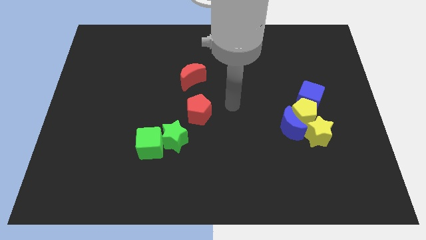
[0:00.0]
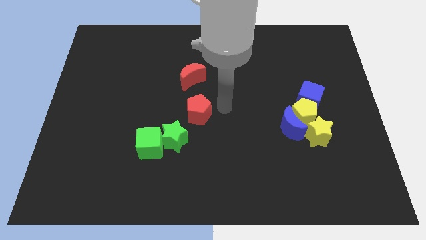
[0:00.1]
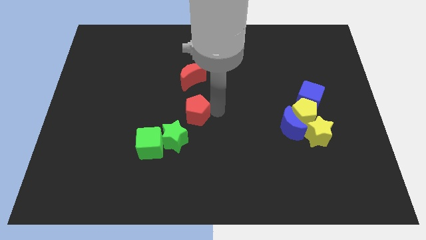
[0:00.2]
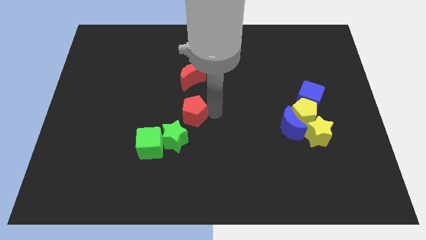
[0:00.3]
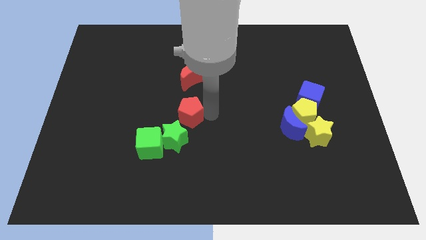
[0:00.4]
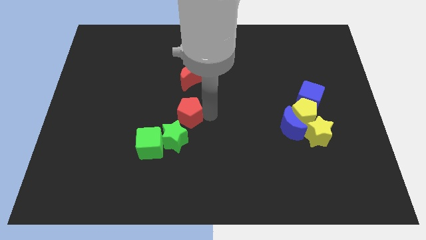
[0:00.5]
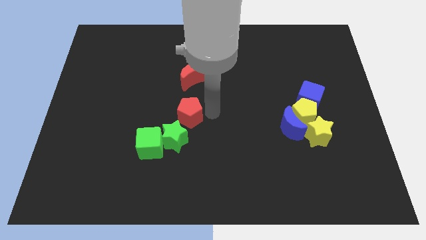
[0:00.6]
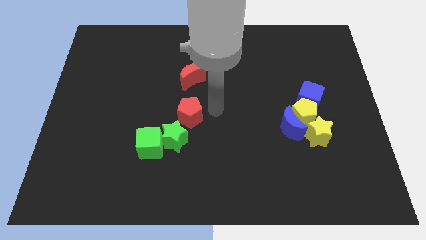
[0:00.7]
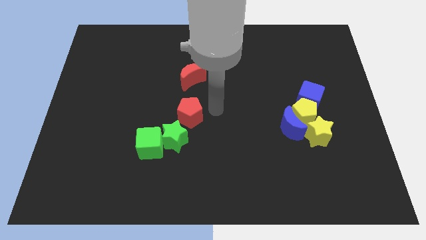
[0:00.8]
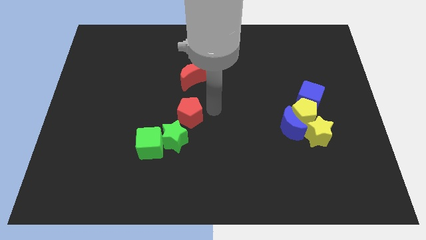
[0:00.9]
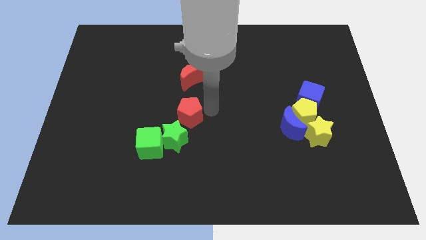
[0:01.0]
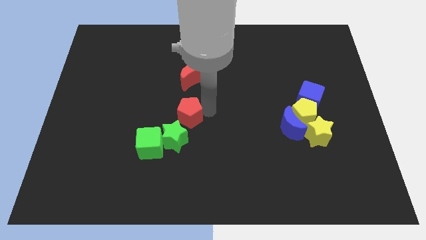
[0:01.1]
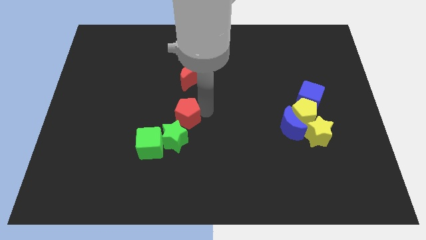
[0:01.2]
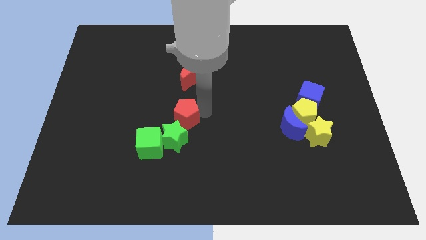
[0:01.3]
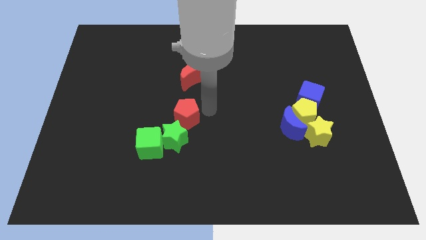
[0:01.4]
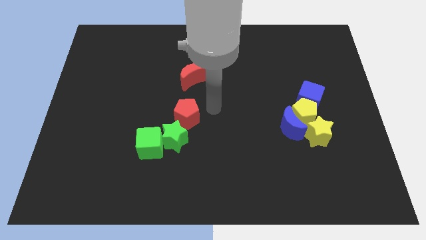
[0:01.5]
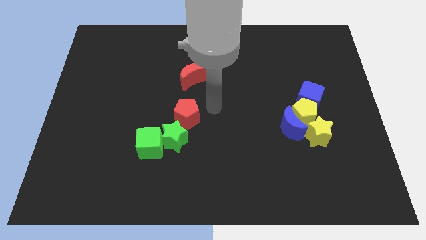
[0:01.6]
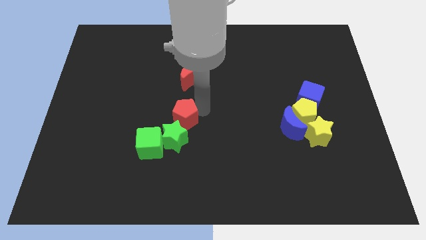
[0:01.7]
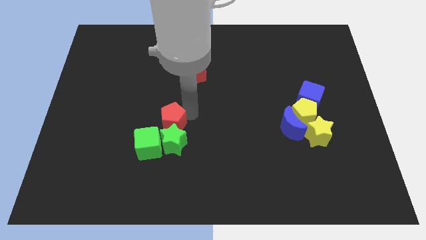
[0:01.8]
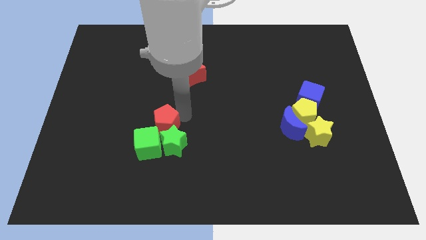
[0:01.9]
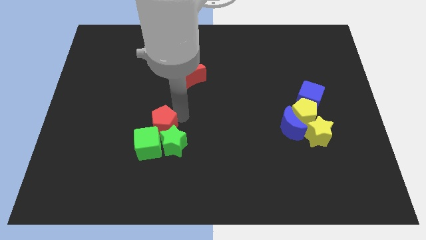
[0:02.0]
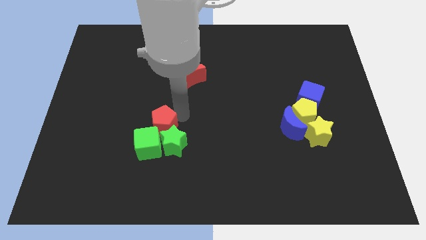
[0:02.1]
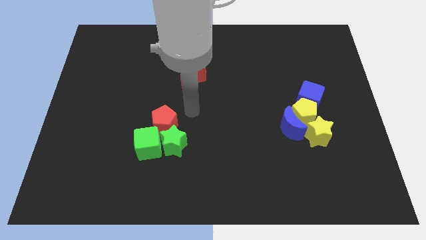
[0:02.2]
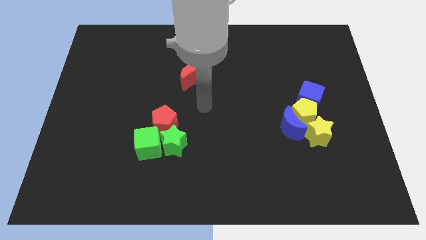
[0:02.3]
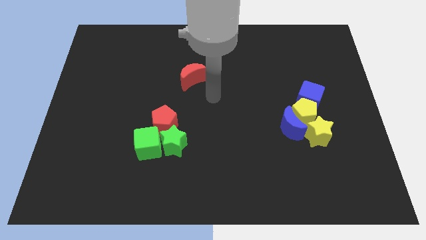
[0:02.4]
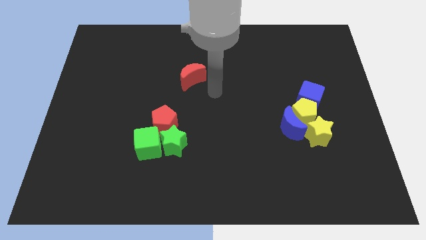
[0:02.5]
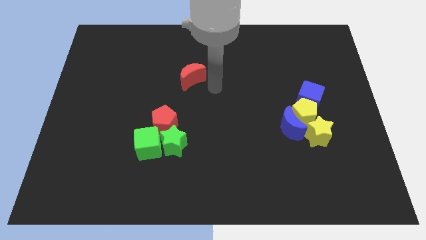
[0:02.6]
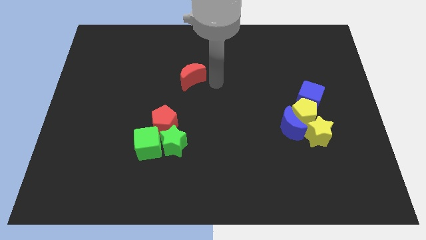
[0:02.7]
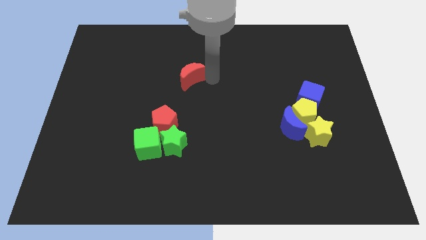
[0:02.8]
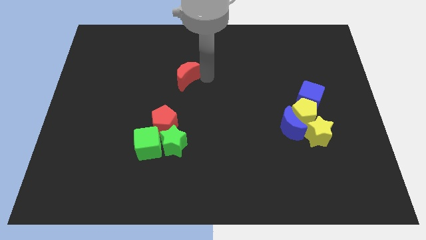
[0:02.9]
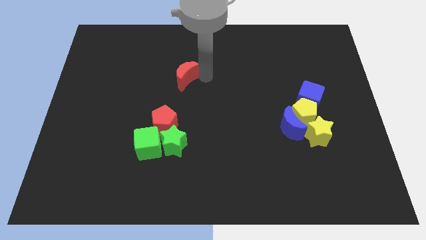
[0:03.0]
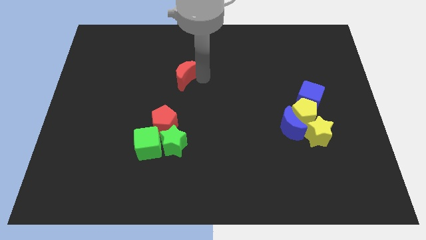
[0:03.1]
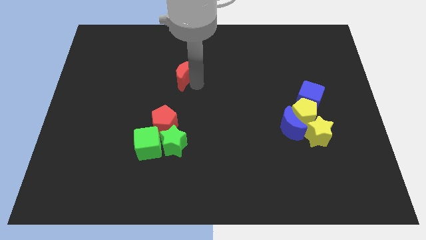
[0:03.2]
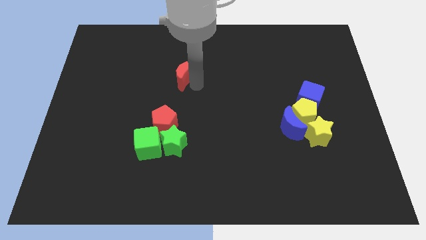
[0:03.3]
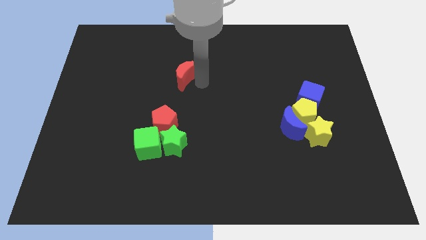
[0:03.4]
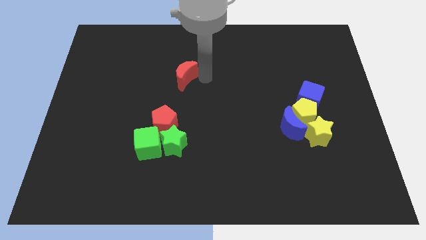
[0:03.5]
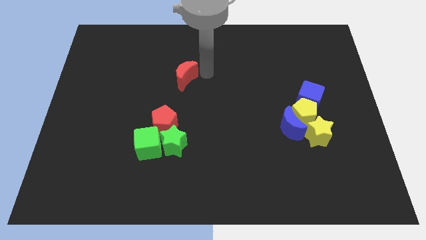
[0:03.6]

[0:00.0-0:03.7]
push the red pentagon into the green blocks

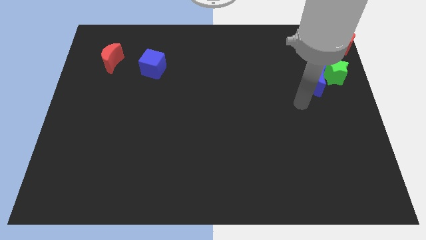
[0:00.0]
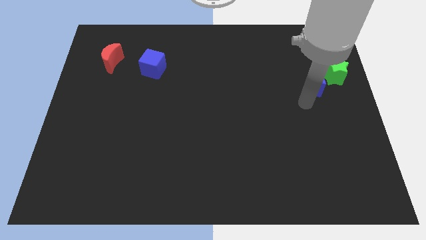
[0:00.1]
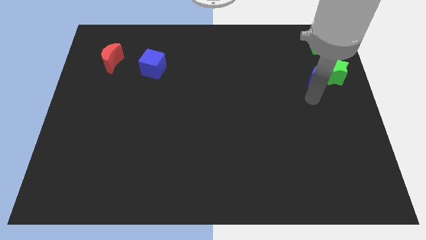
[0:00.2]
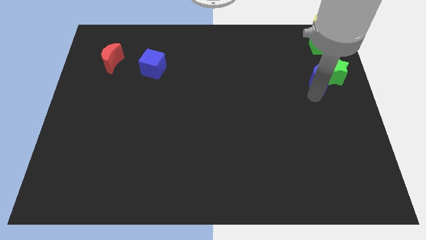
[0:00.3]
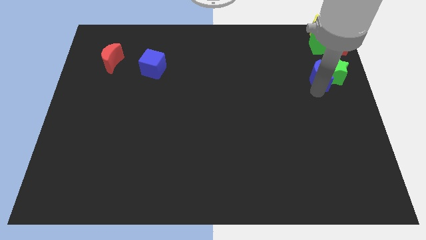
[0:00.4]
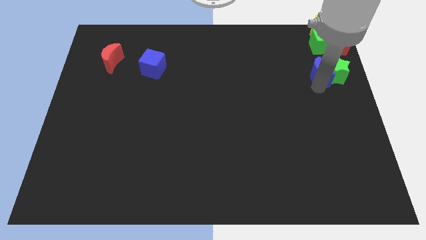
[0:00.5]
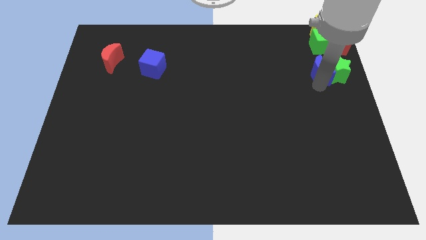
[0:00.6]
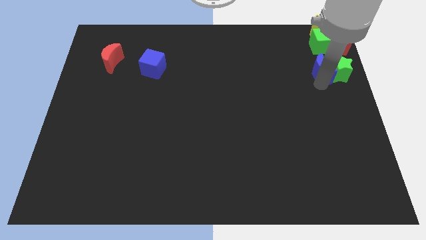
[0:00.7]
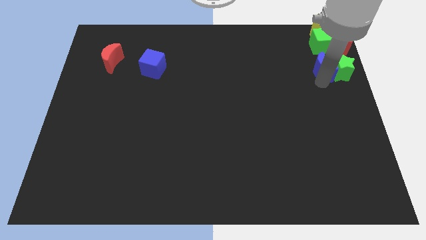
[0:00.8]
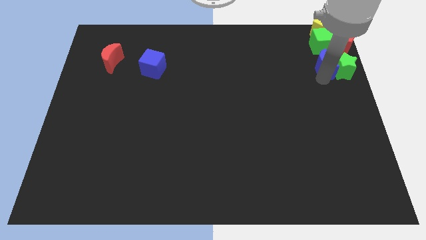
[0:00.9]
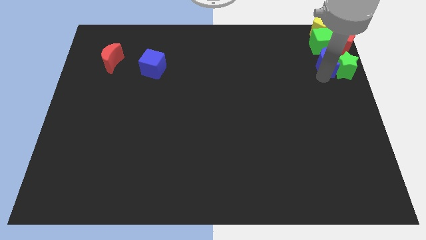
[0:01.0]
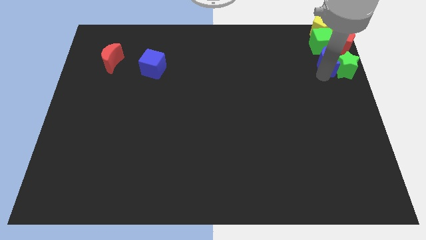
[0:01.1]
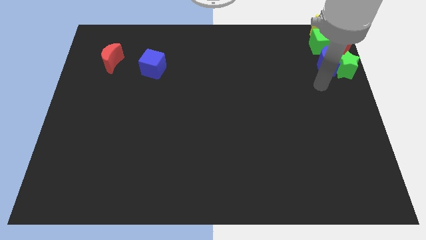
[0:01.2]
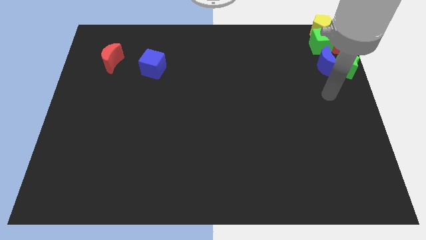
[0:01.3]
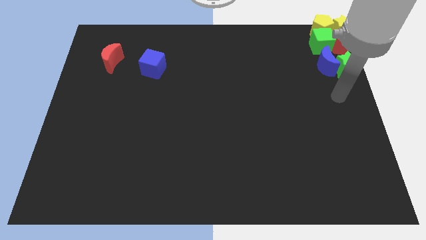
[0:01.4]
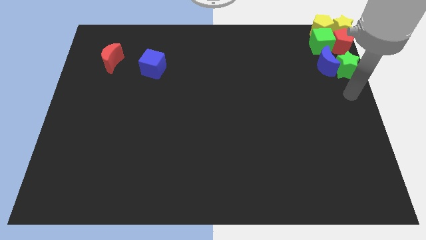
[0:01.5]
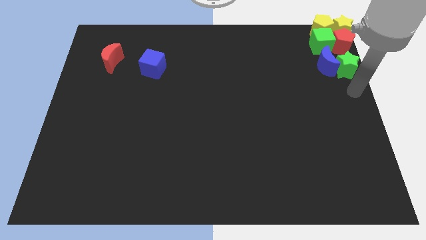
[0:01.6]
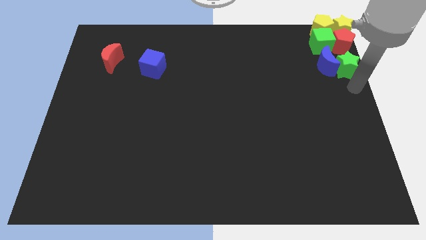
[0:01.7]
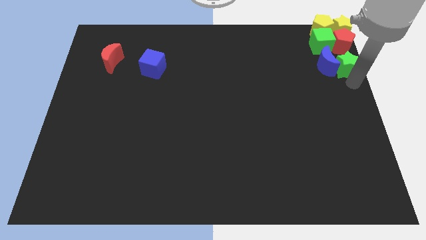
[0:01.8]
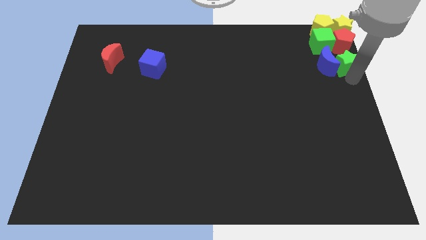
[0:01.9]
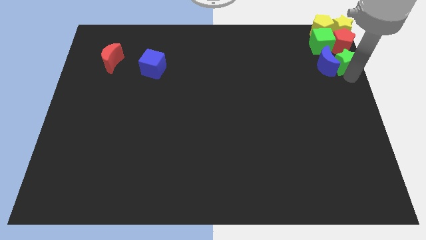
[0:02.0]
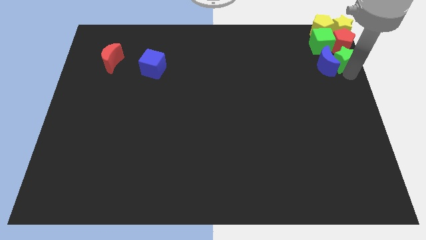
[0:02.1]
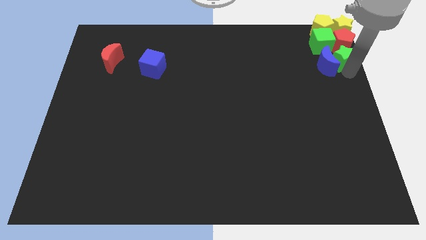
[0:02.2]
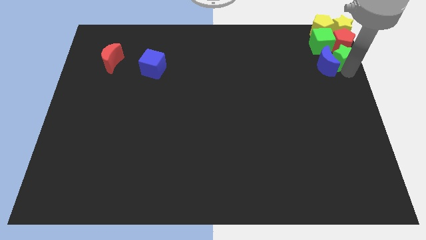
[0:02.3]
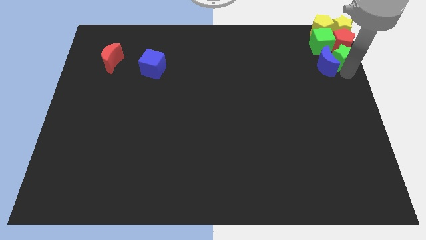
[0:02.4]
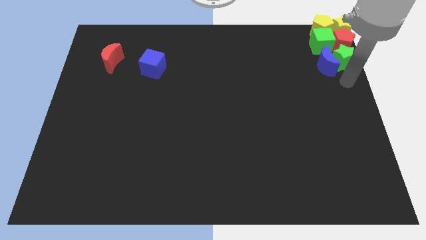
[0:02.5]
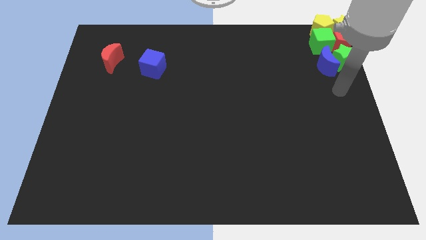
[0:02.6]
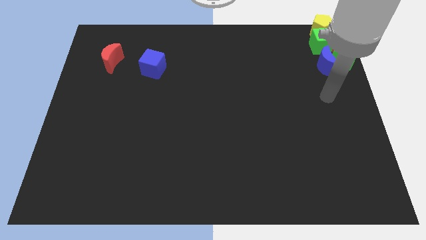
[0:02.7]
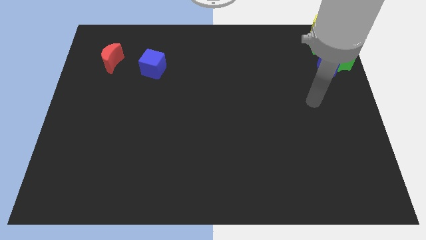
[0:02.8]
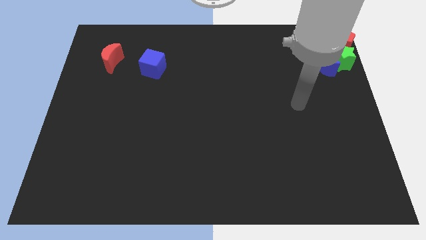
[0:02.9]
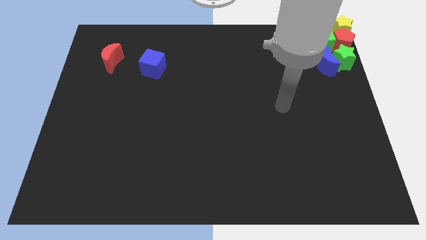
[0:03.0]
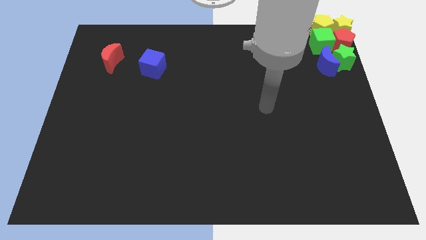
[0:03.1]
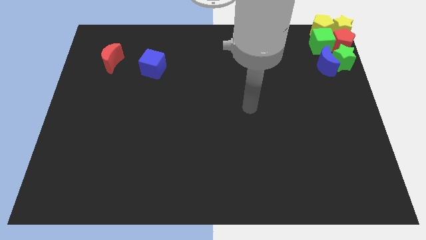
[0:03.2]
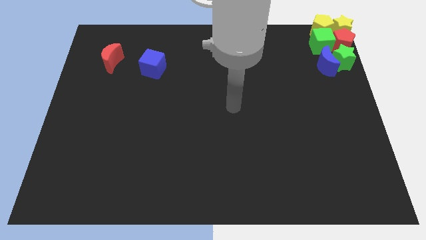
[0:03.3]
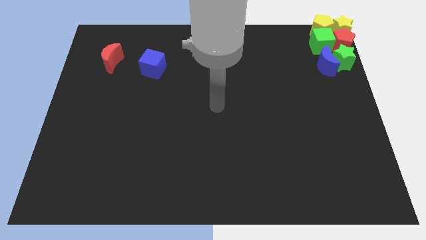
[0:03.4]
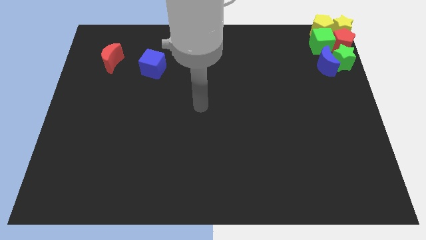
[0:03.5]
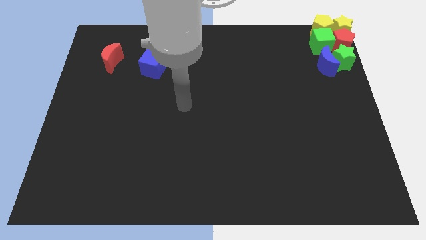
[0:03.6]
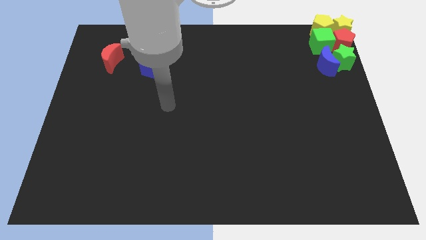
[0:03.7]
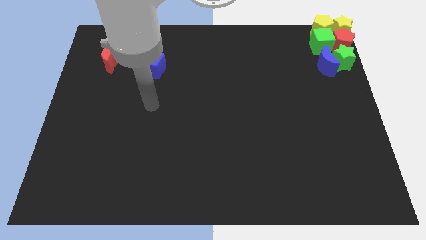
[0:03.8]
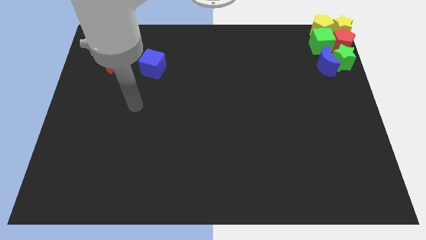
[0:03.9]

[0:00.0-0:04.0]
move your arm away from the blocks

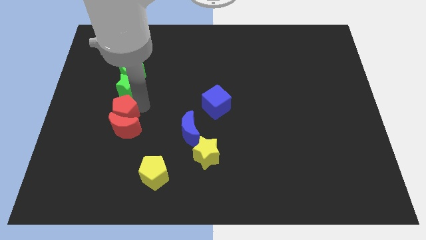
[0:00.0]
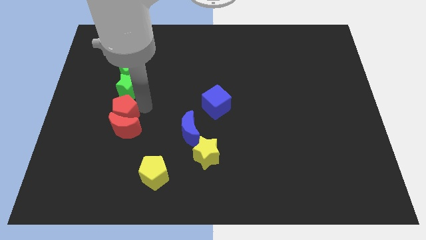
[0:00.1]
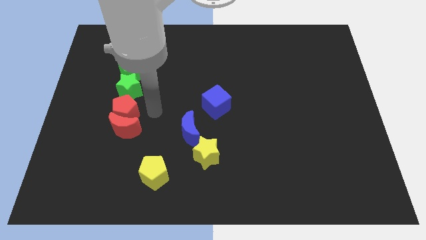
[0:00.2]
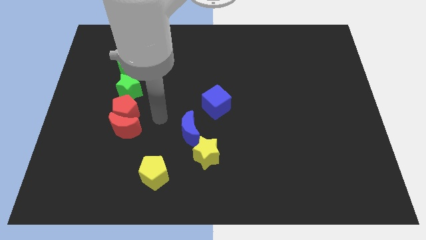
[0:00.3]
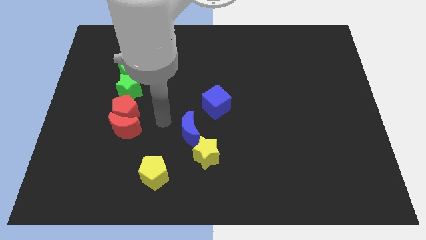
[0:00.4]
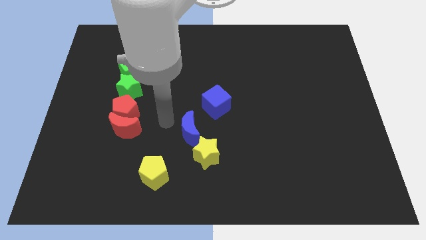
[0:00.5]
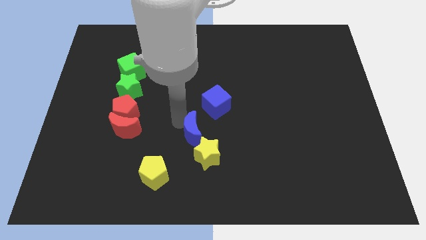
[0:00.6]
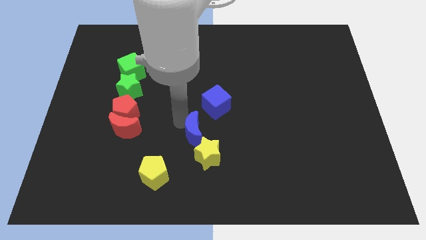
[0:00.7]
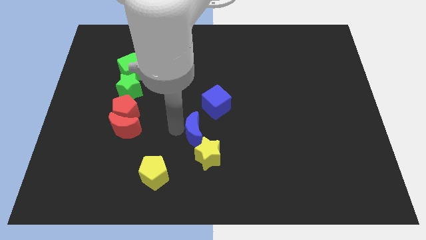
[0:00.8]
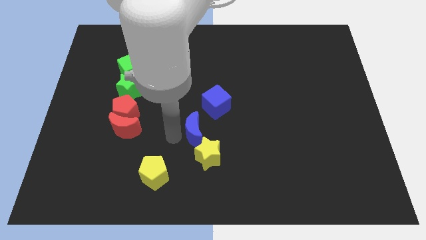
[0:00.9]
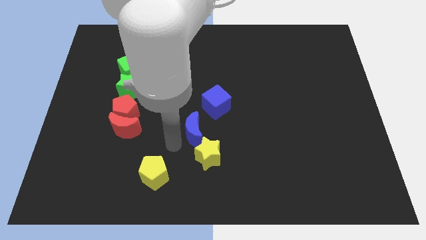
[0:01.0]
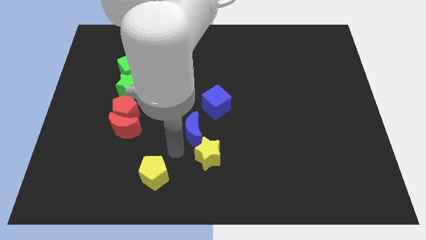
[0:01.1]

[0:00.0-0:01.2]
move your arm away from the red pentagon

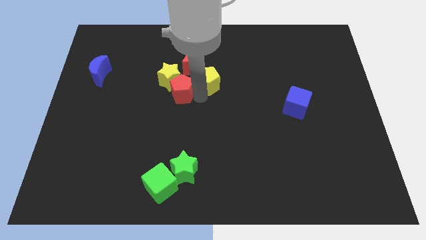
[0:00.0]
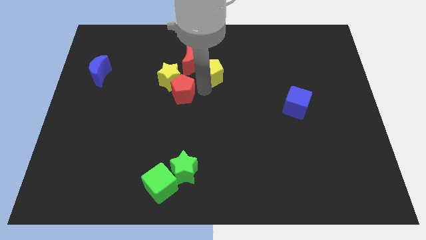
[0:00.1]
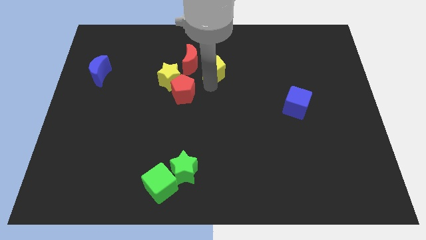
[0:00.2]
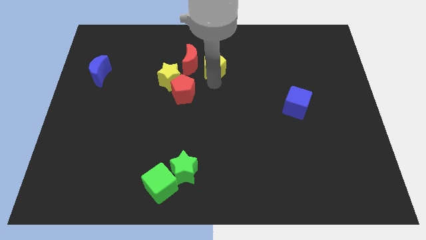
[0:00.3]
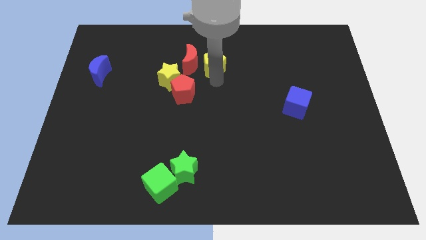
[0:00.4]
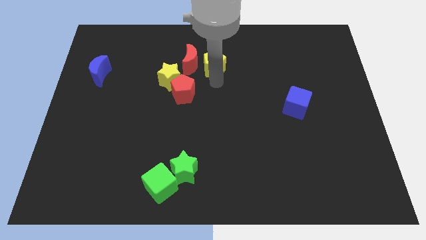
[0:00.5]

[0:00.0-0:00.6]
place the yellow pentagon right to the red moon
